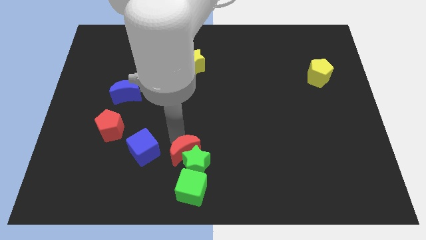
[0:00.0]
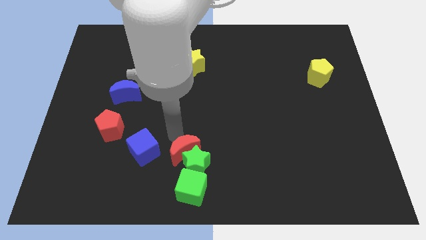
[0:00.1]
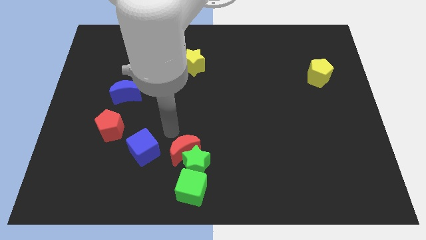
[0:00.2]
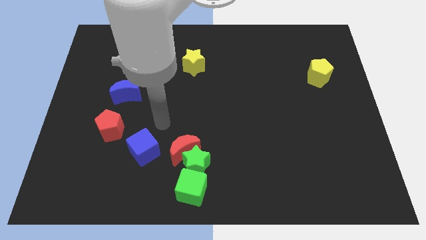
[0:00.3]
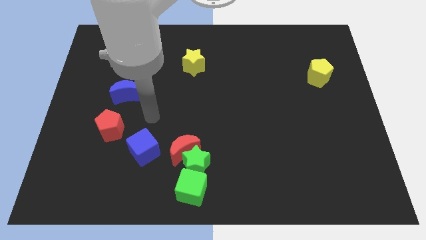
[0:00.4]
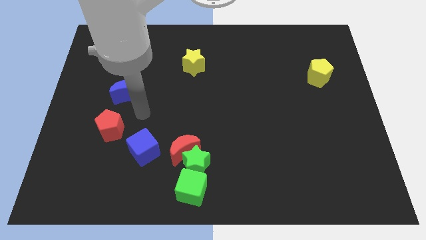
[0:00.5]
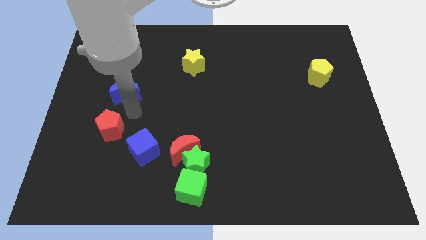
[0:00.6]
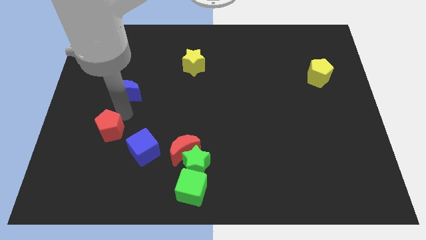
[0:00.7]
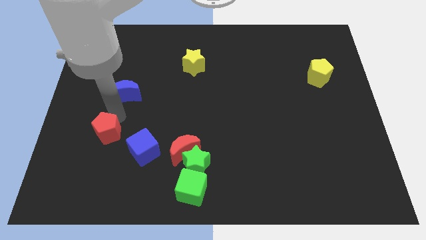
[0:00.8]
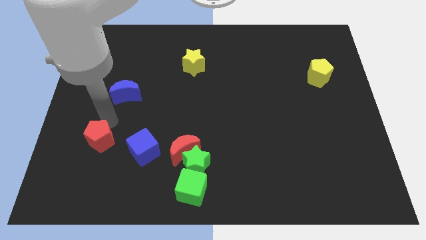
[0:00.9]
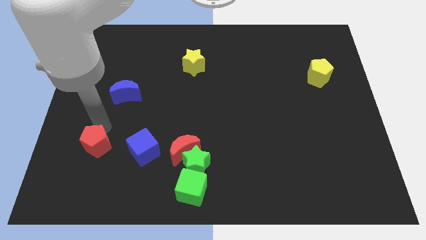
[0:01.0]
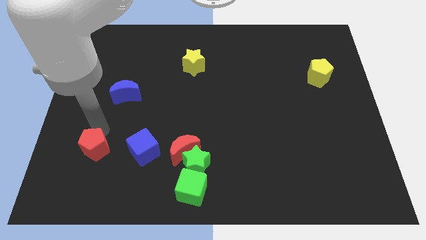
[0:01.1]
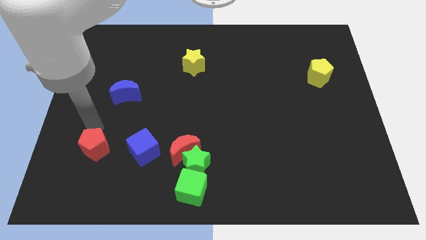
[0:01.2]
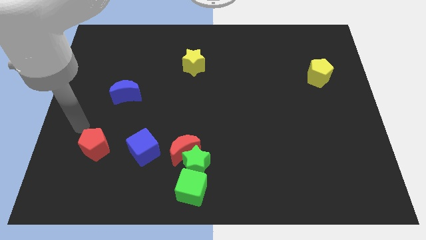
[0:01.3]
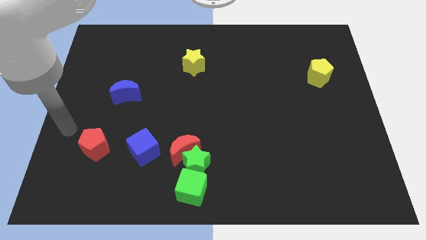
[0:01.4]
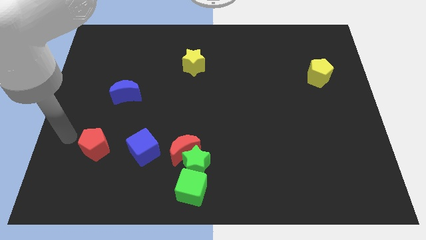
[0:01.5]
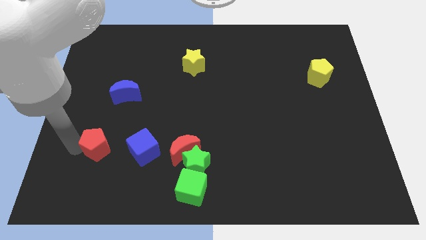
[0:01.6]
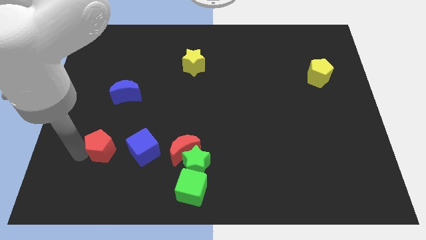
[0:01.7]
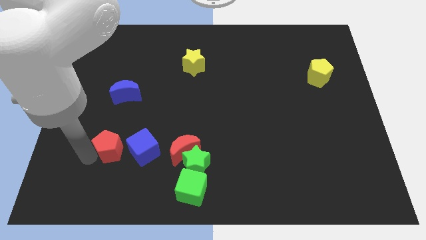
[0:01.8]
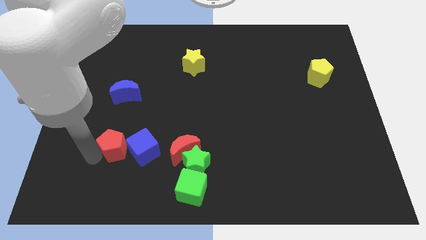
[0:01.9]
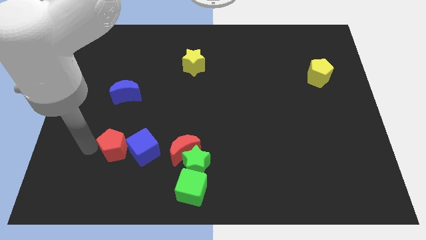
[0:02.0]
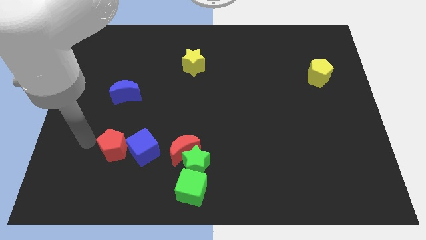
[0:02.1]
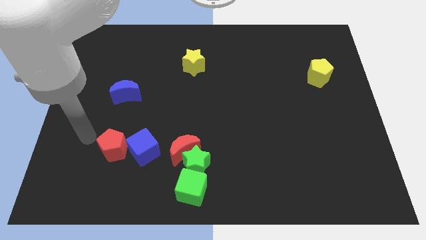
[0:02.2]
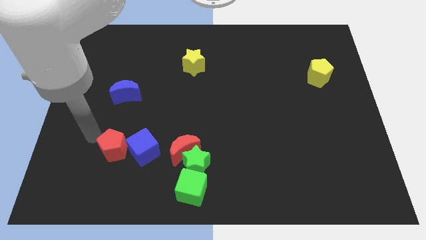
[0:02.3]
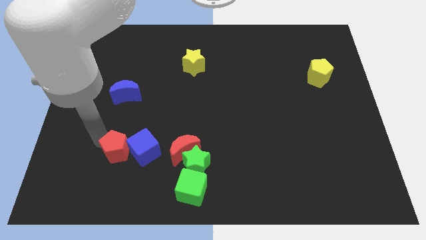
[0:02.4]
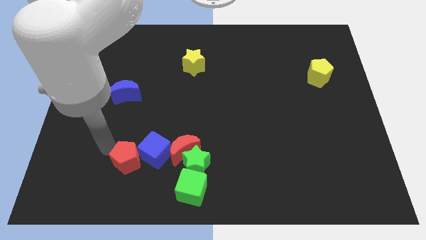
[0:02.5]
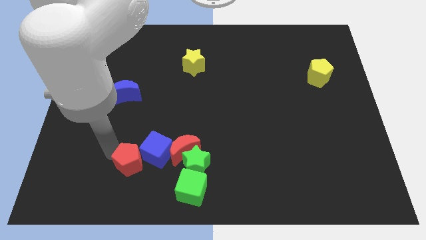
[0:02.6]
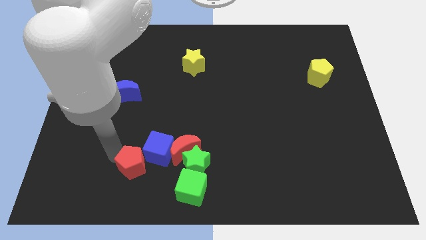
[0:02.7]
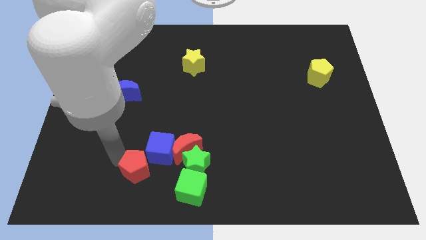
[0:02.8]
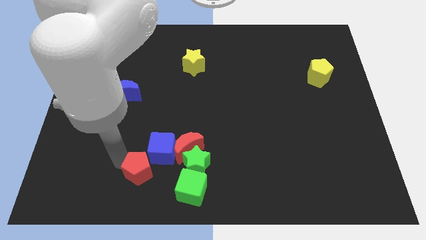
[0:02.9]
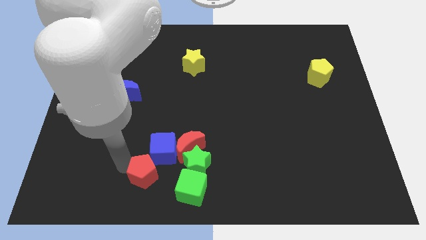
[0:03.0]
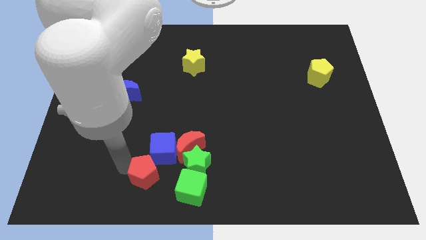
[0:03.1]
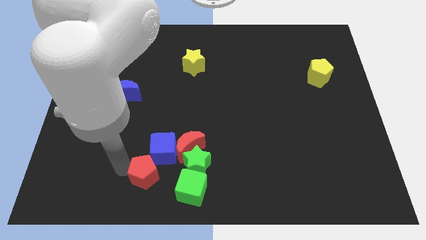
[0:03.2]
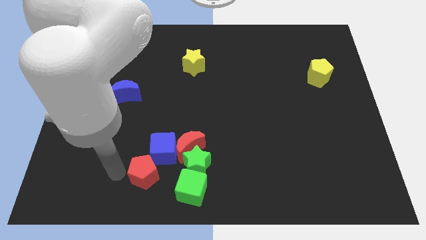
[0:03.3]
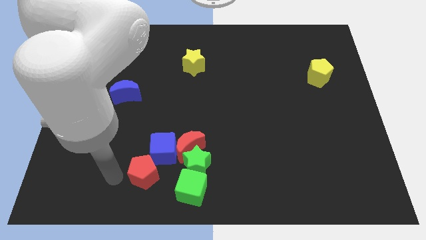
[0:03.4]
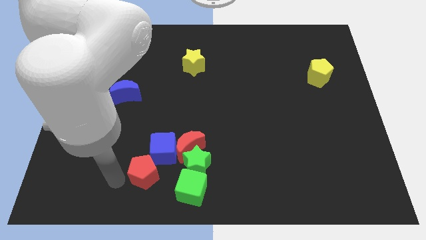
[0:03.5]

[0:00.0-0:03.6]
push the red pentagon into the blue cube

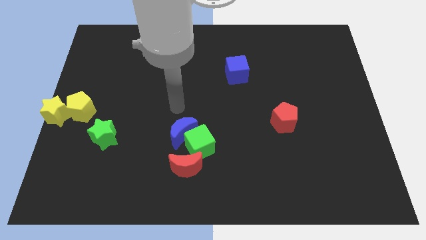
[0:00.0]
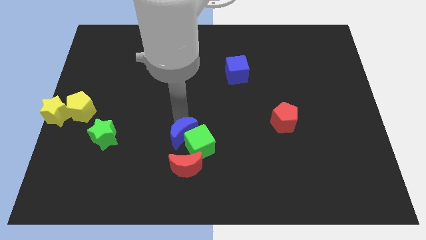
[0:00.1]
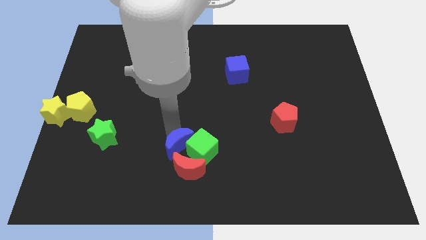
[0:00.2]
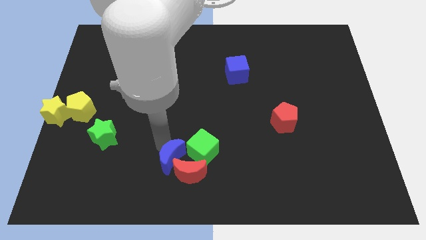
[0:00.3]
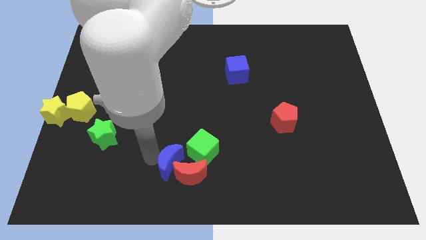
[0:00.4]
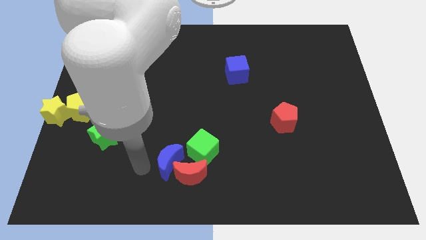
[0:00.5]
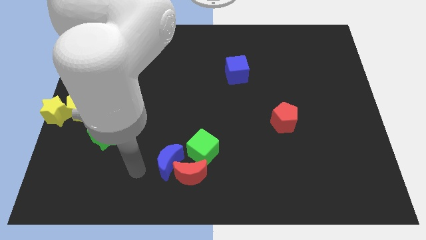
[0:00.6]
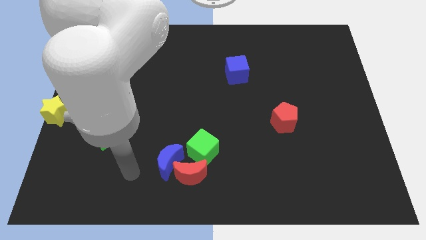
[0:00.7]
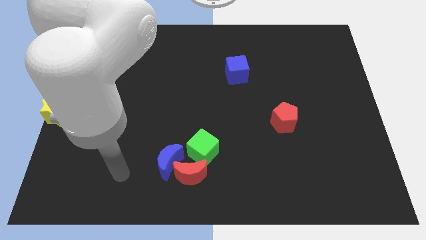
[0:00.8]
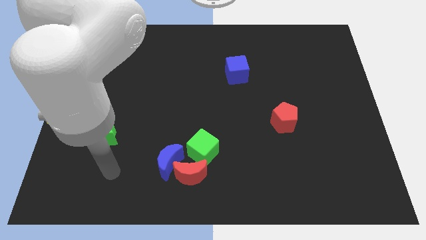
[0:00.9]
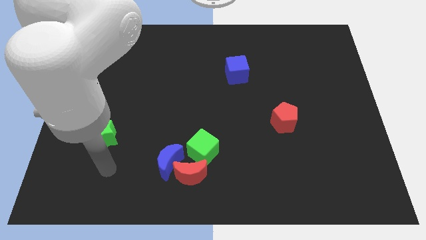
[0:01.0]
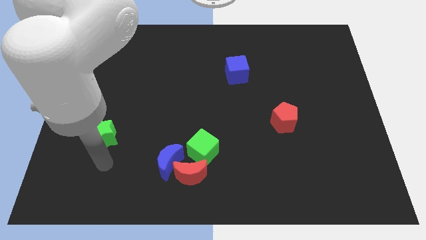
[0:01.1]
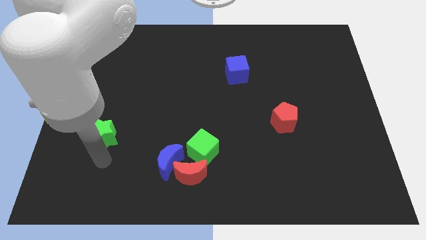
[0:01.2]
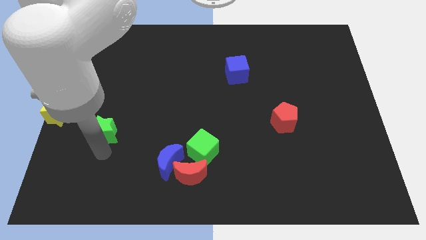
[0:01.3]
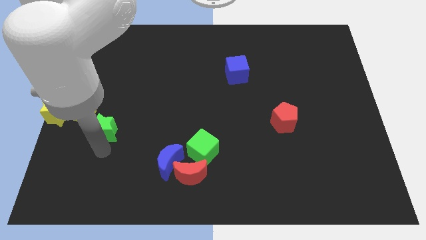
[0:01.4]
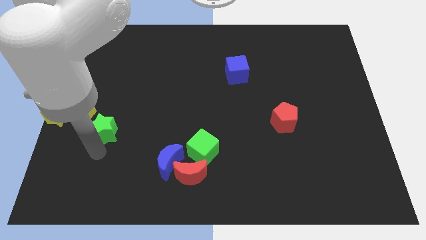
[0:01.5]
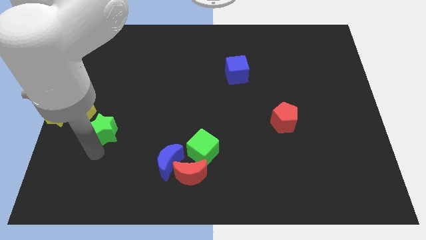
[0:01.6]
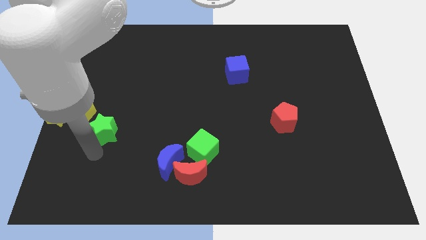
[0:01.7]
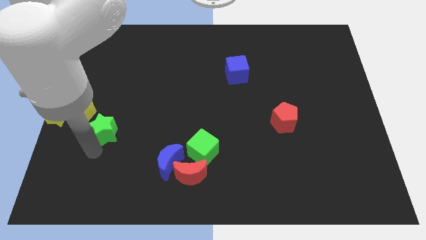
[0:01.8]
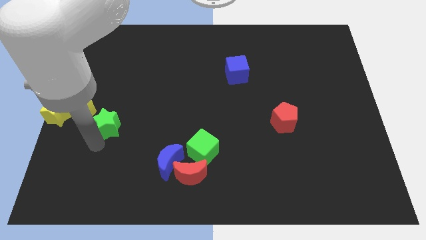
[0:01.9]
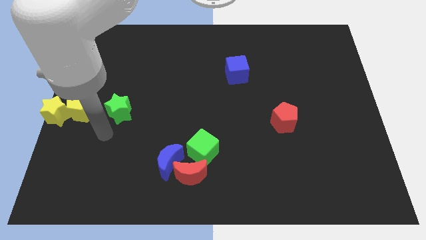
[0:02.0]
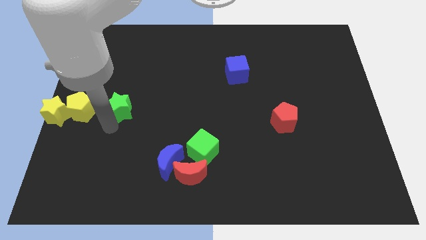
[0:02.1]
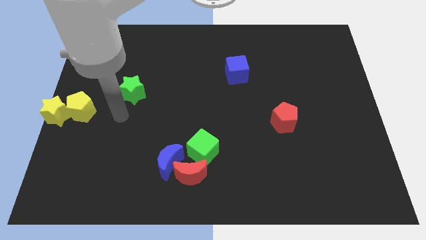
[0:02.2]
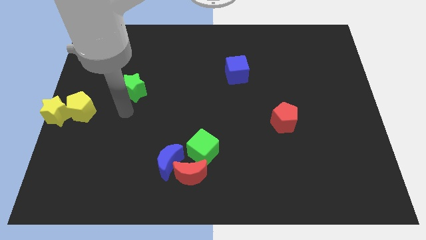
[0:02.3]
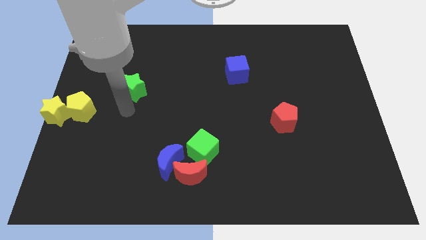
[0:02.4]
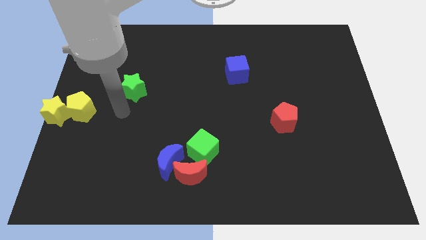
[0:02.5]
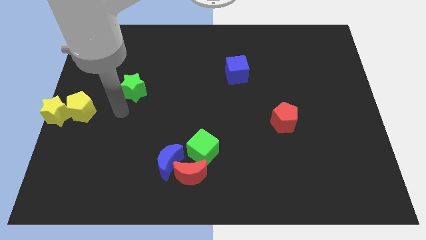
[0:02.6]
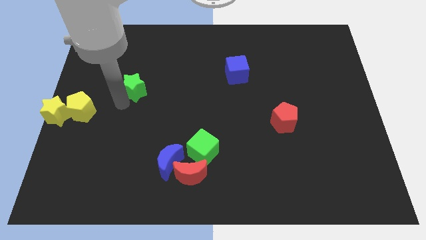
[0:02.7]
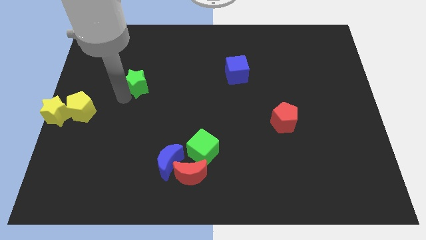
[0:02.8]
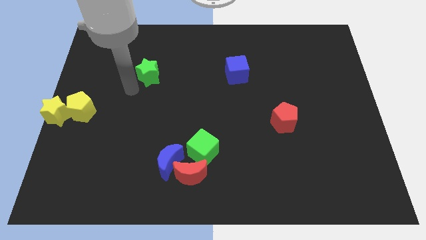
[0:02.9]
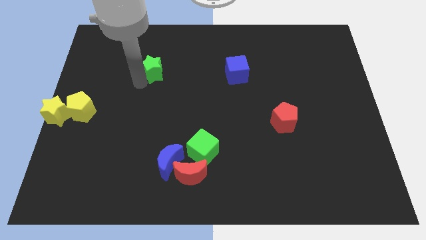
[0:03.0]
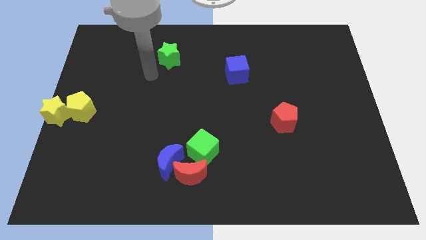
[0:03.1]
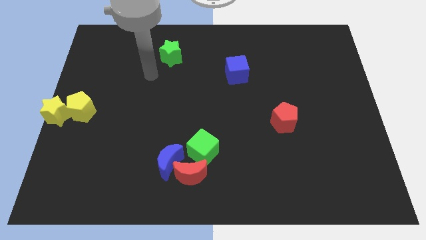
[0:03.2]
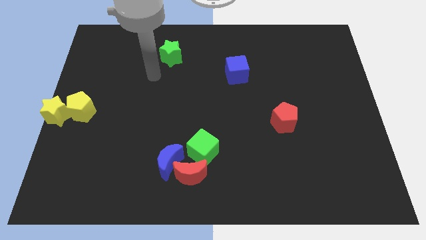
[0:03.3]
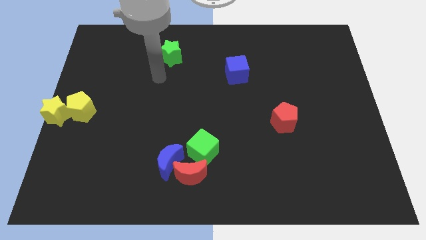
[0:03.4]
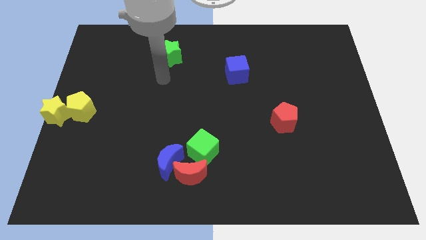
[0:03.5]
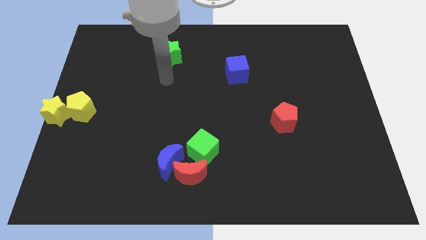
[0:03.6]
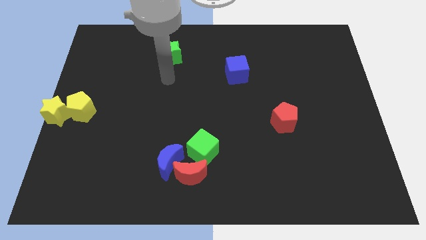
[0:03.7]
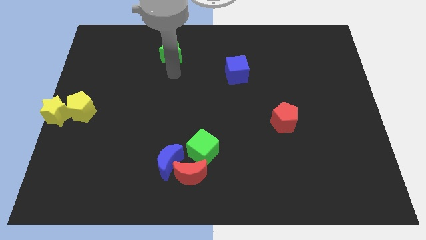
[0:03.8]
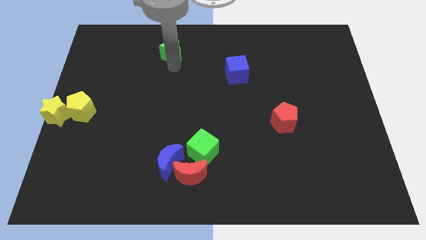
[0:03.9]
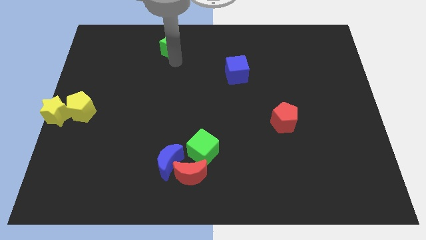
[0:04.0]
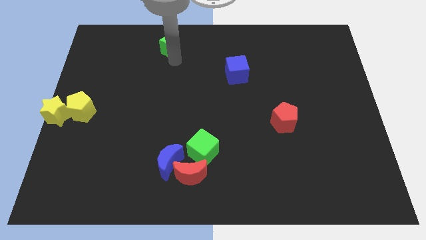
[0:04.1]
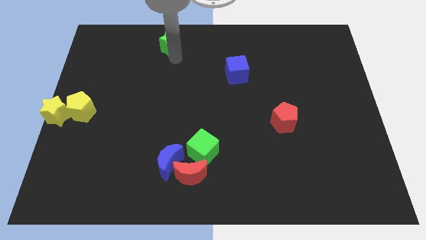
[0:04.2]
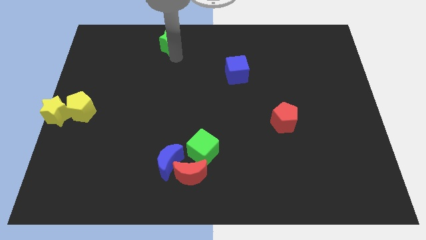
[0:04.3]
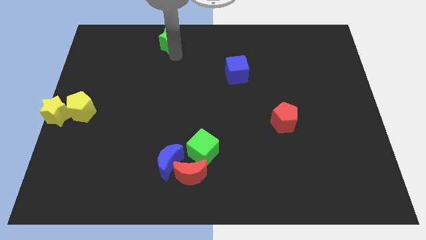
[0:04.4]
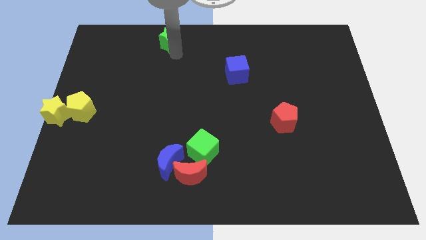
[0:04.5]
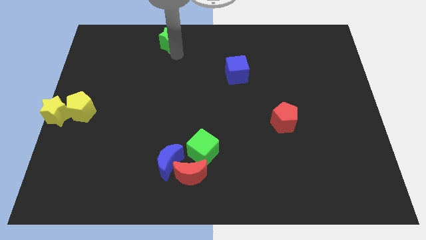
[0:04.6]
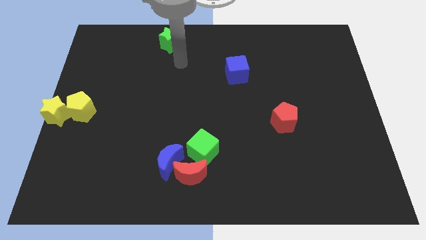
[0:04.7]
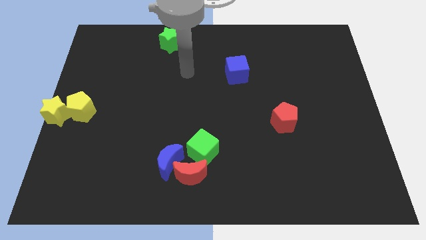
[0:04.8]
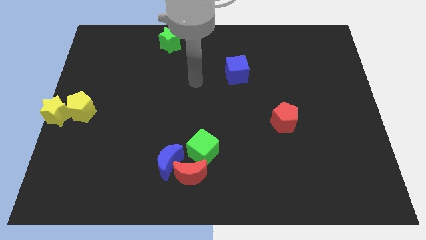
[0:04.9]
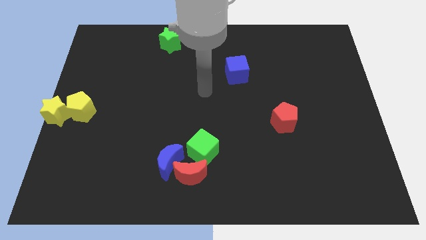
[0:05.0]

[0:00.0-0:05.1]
move the green star towards the top center of the board

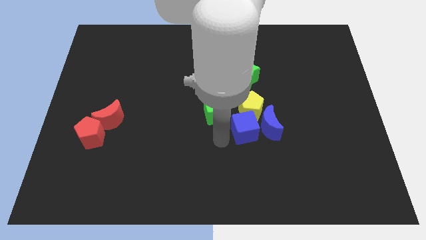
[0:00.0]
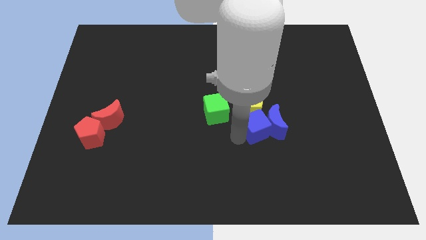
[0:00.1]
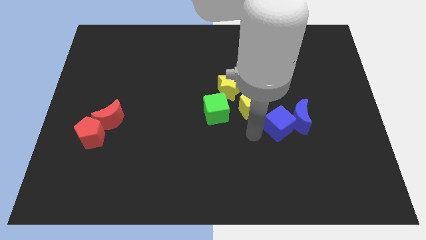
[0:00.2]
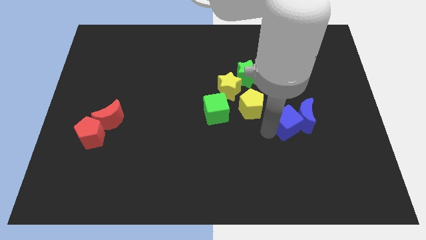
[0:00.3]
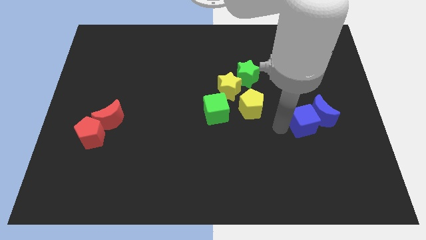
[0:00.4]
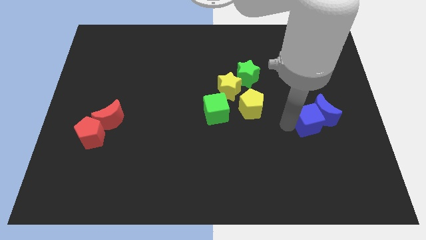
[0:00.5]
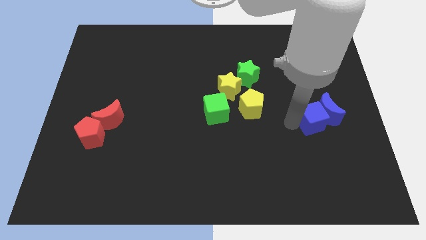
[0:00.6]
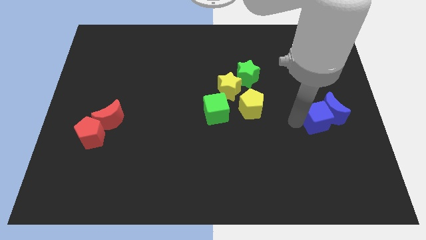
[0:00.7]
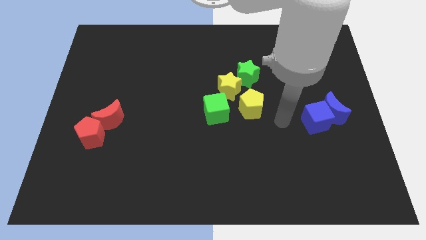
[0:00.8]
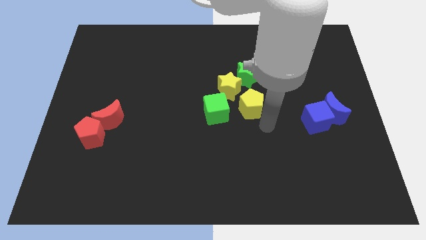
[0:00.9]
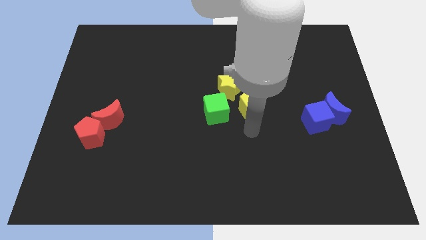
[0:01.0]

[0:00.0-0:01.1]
push the blue cube and blue moon to the right side of the board
